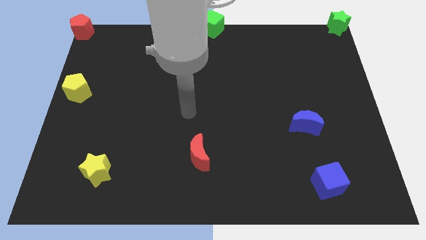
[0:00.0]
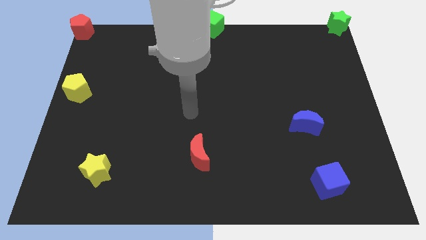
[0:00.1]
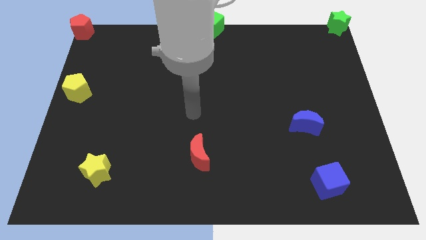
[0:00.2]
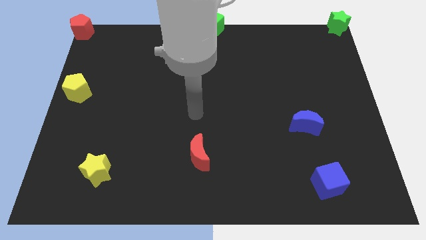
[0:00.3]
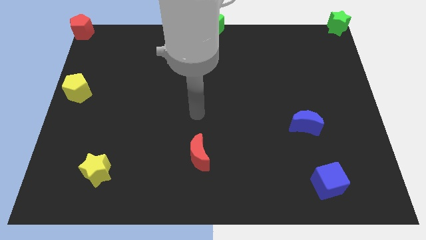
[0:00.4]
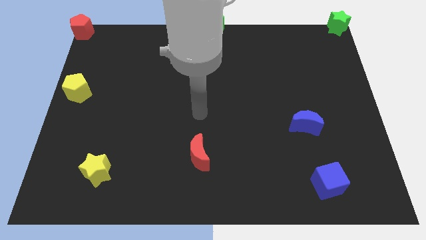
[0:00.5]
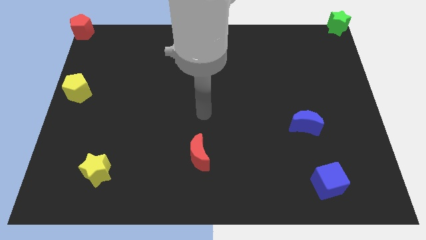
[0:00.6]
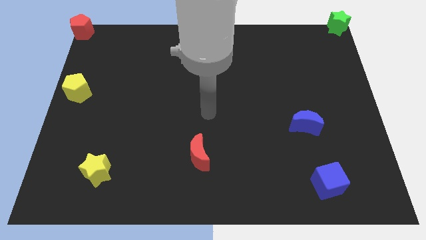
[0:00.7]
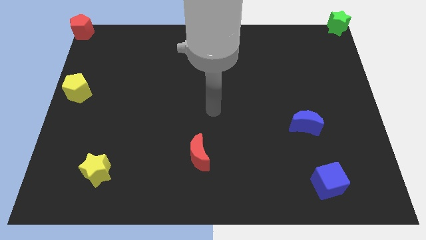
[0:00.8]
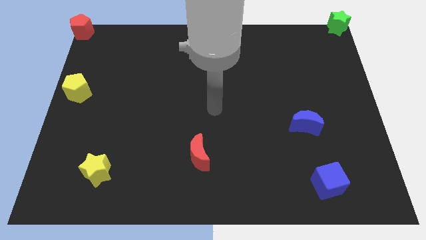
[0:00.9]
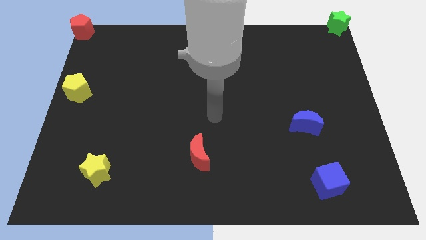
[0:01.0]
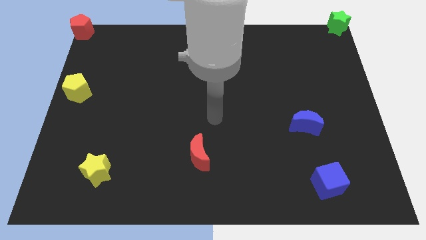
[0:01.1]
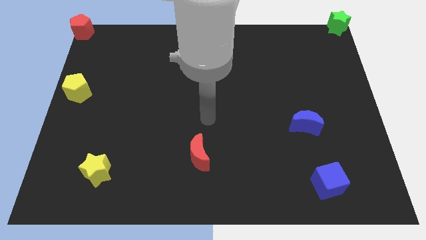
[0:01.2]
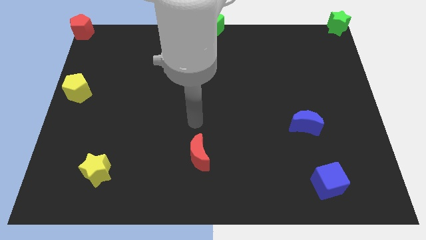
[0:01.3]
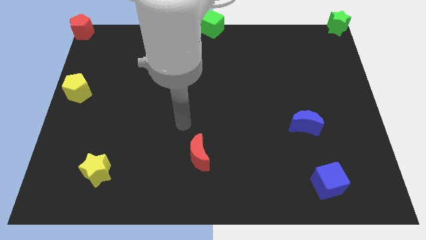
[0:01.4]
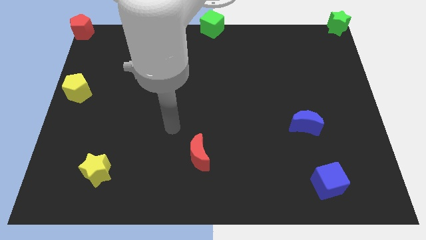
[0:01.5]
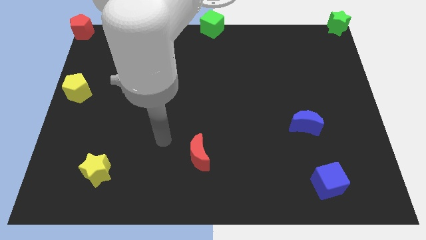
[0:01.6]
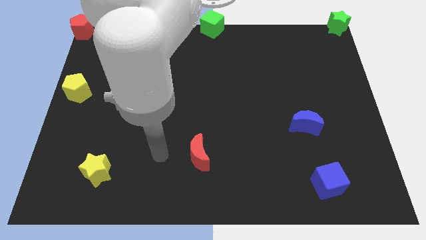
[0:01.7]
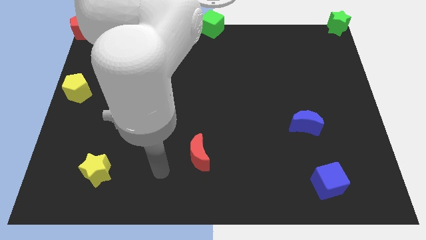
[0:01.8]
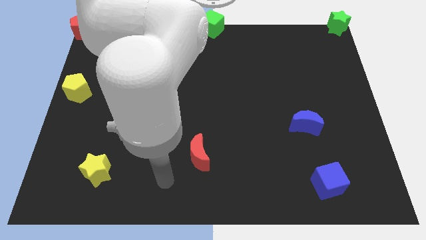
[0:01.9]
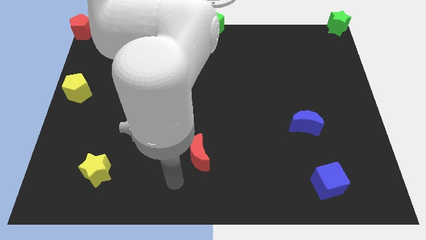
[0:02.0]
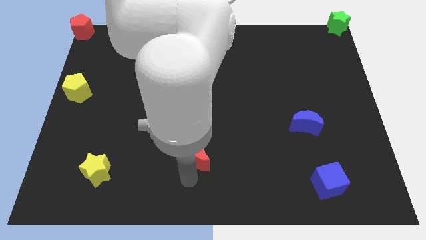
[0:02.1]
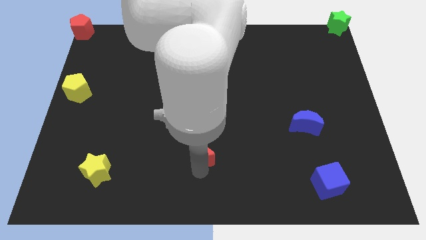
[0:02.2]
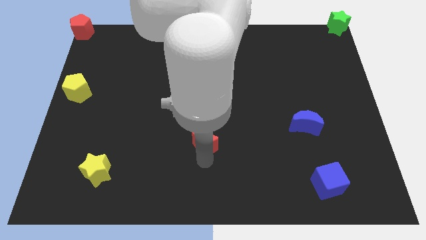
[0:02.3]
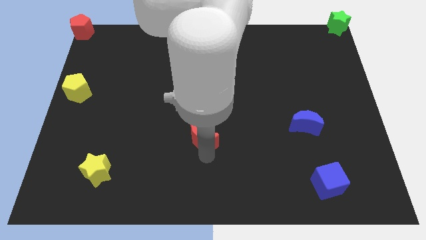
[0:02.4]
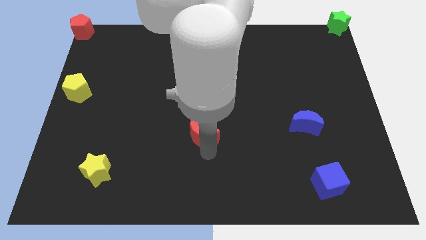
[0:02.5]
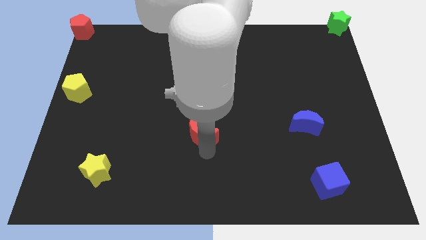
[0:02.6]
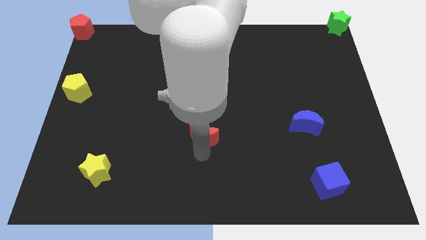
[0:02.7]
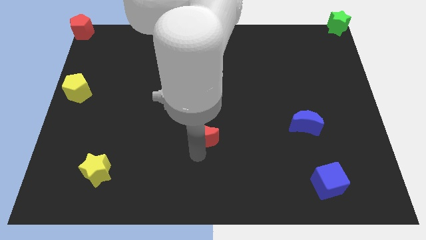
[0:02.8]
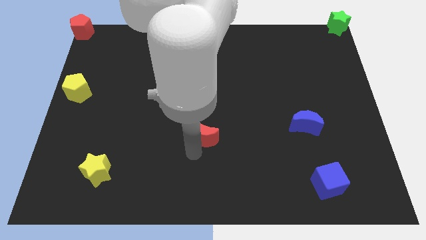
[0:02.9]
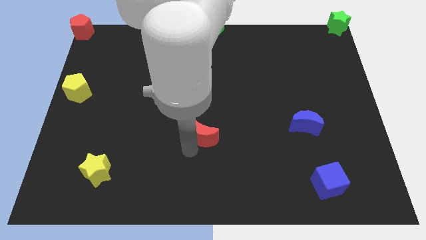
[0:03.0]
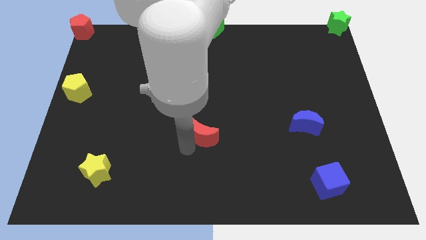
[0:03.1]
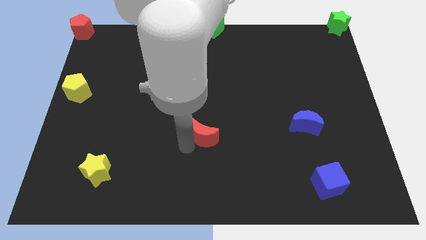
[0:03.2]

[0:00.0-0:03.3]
move the red moon slightly to the top of the board

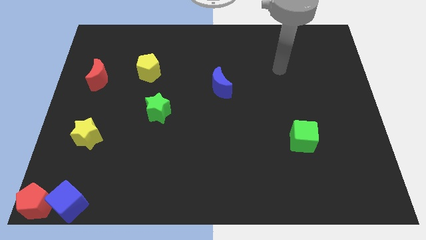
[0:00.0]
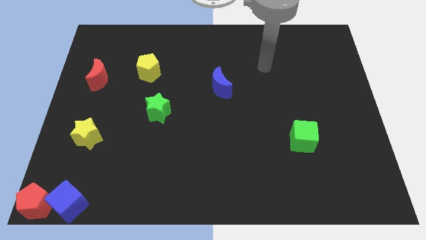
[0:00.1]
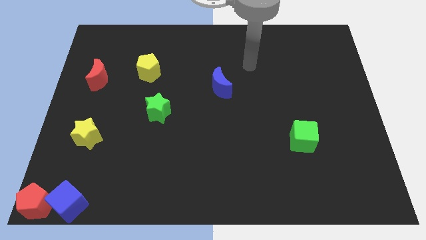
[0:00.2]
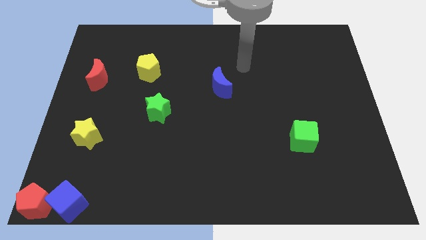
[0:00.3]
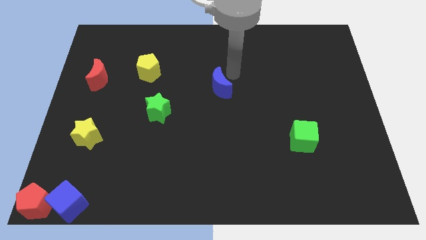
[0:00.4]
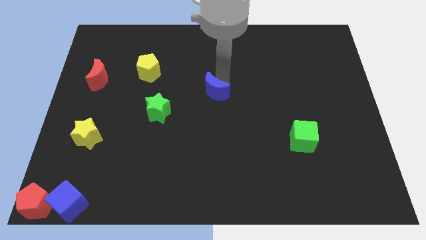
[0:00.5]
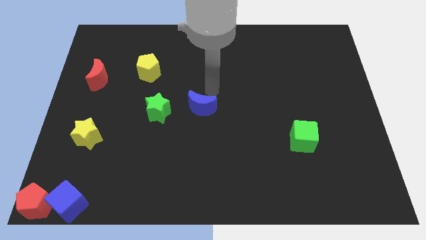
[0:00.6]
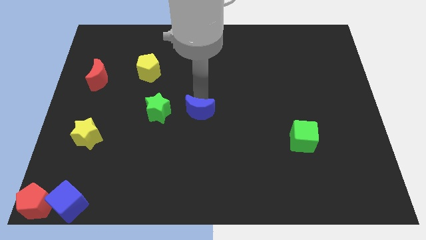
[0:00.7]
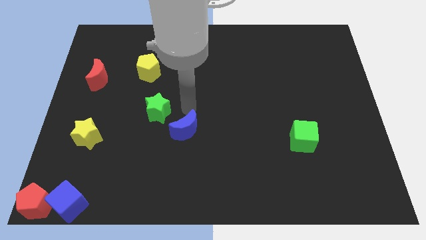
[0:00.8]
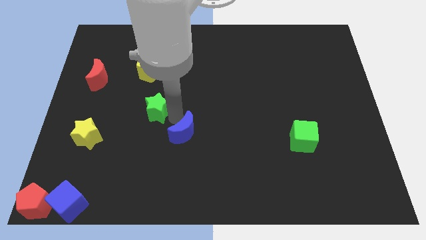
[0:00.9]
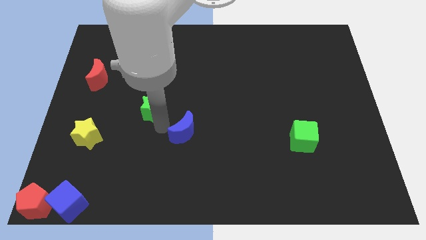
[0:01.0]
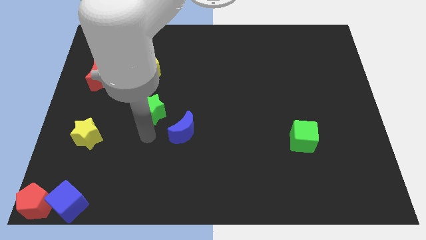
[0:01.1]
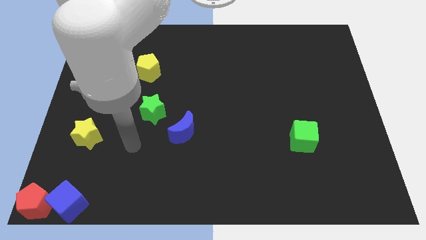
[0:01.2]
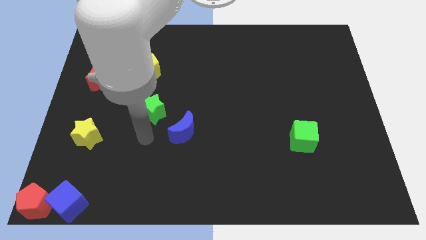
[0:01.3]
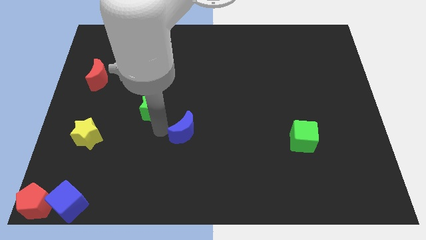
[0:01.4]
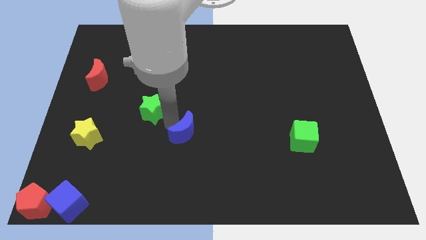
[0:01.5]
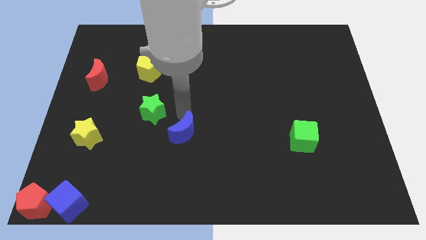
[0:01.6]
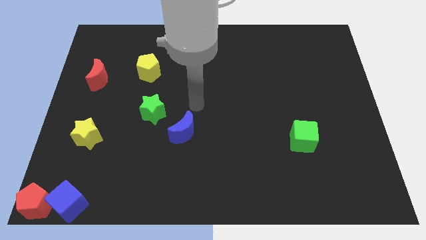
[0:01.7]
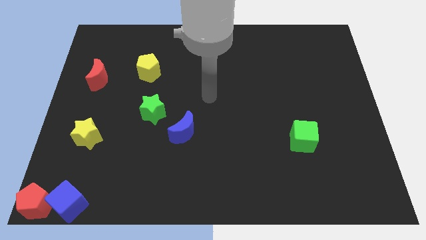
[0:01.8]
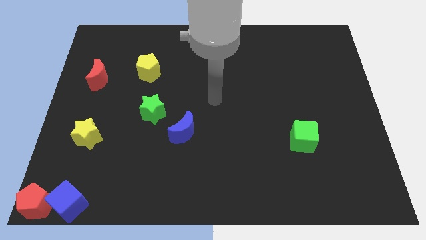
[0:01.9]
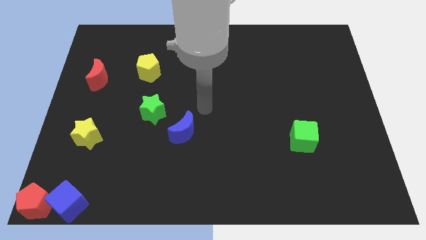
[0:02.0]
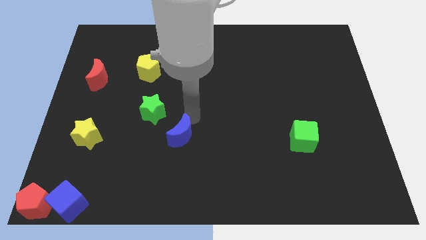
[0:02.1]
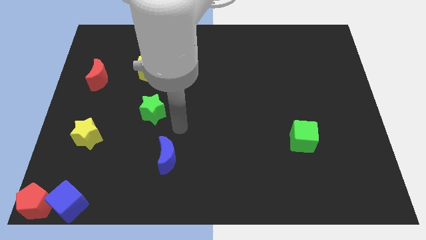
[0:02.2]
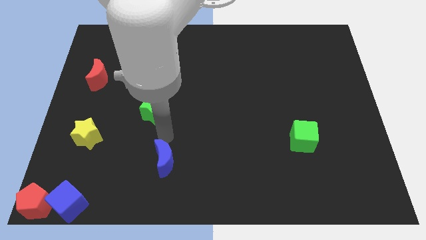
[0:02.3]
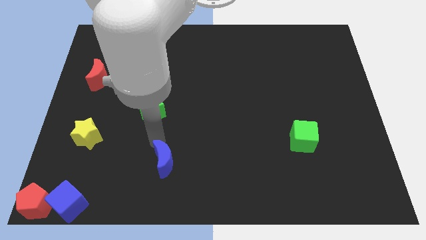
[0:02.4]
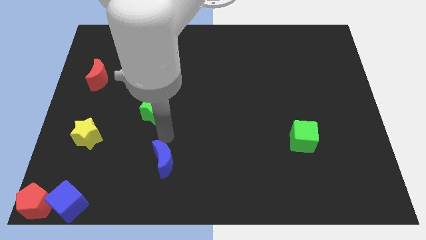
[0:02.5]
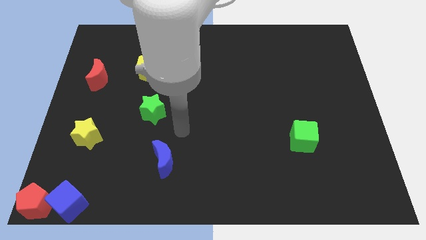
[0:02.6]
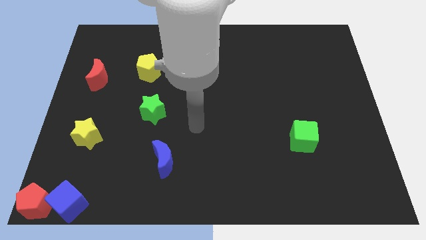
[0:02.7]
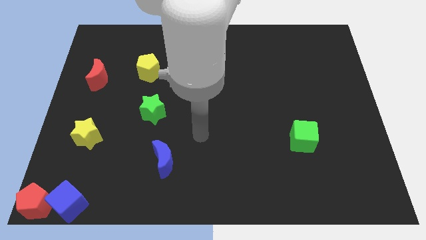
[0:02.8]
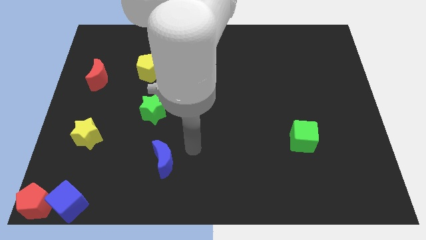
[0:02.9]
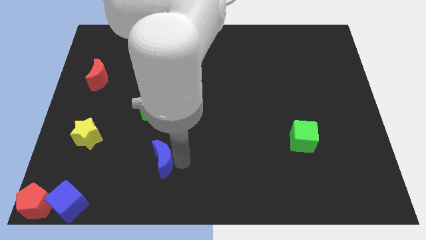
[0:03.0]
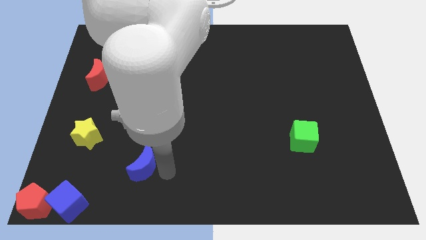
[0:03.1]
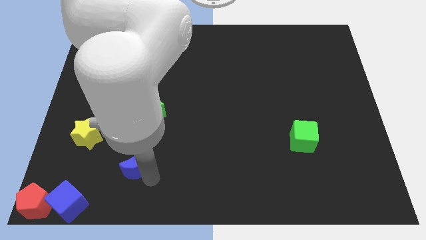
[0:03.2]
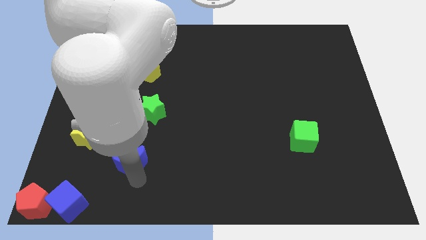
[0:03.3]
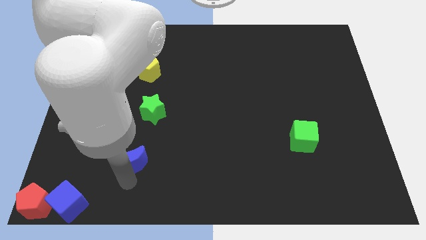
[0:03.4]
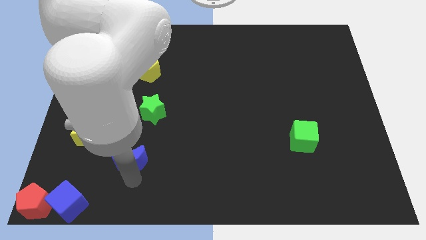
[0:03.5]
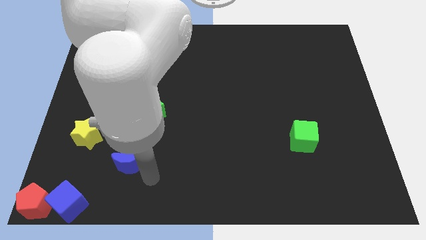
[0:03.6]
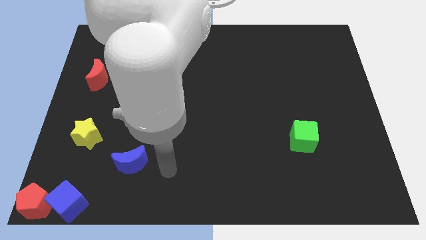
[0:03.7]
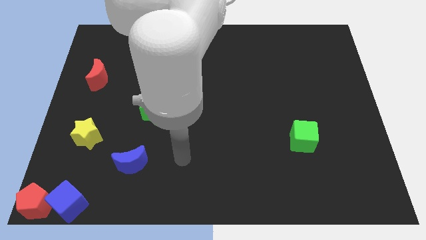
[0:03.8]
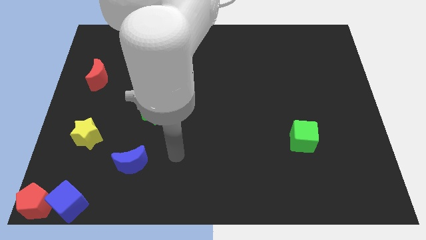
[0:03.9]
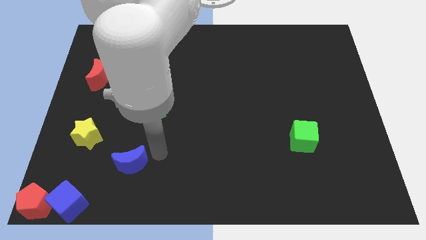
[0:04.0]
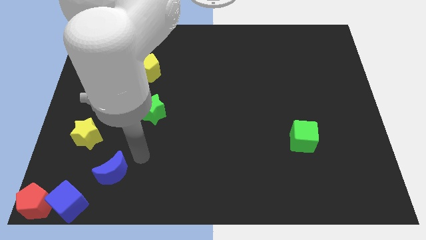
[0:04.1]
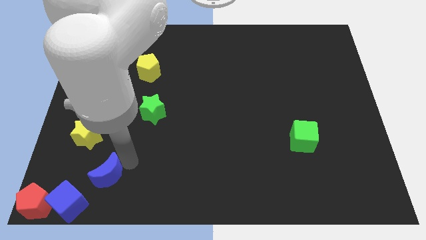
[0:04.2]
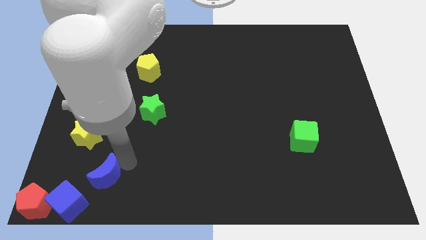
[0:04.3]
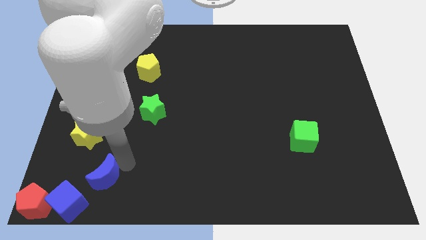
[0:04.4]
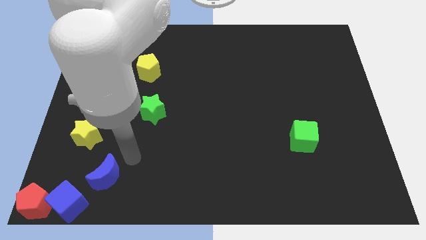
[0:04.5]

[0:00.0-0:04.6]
slide the blue crescent diagonally on the top right side of the blue cube

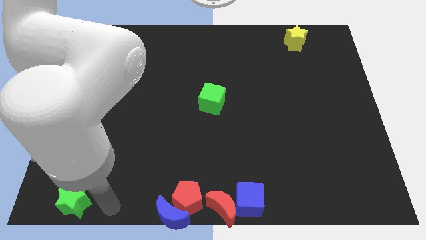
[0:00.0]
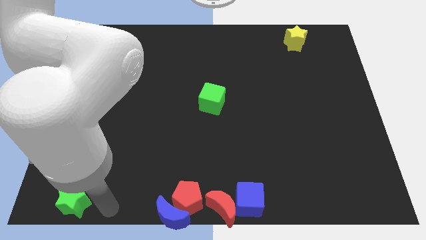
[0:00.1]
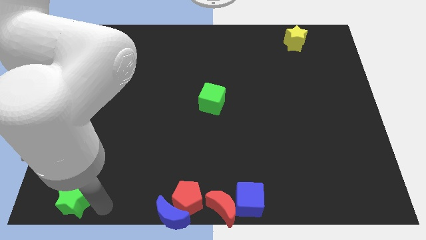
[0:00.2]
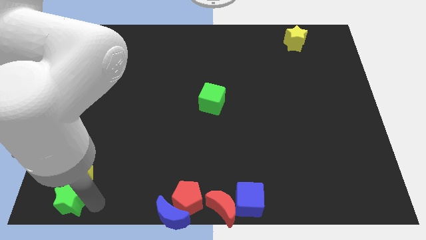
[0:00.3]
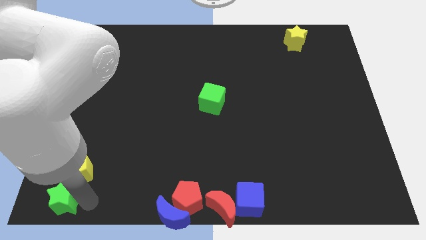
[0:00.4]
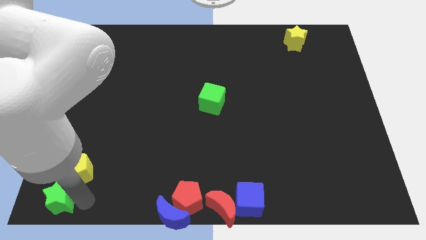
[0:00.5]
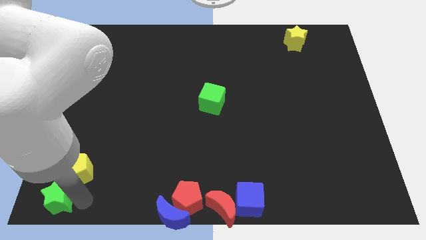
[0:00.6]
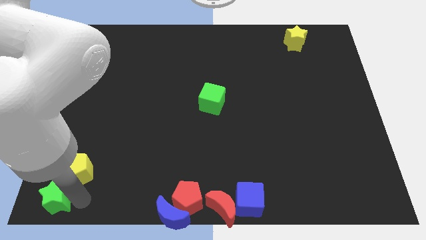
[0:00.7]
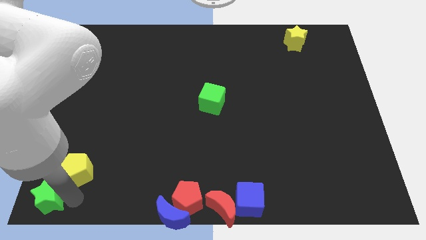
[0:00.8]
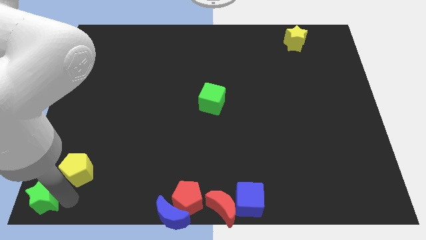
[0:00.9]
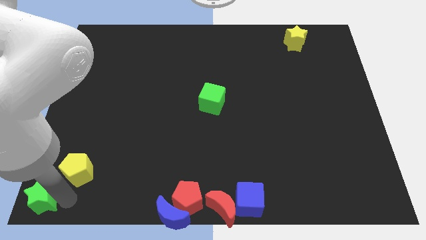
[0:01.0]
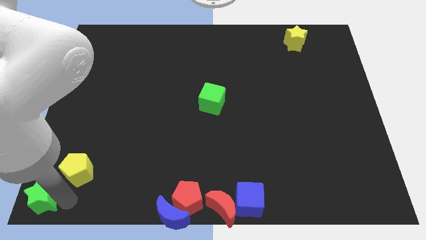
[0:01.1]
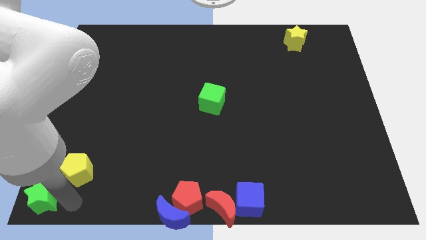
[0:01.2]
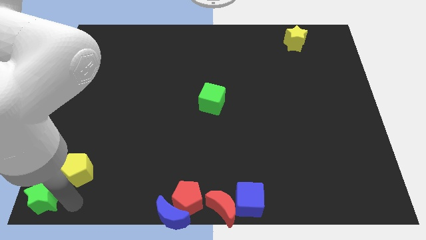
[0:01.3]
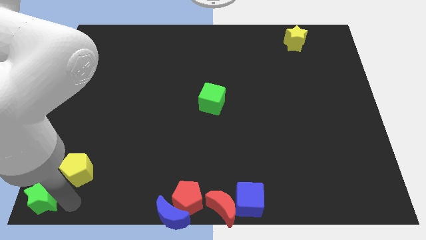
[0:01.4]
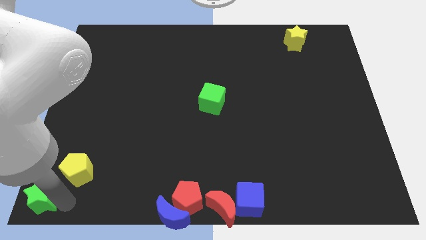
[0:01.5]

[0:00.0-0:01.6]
drag the green star to the bottom left
